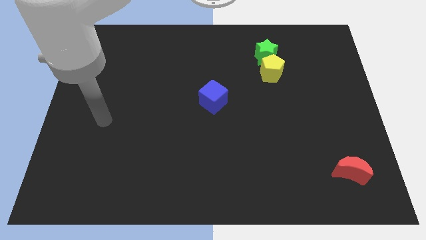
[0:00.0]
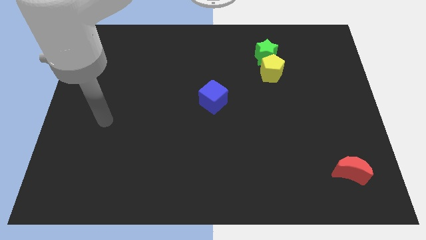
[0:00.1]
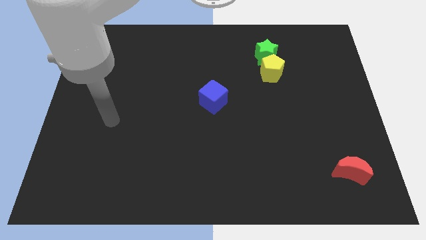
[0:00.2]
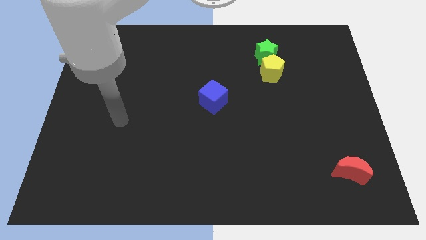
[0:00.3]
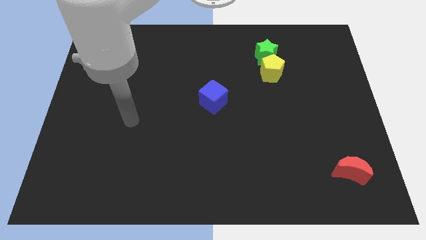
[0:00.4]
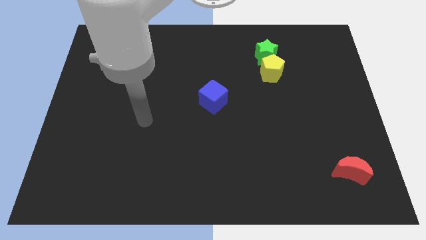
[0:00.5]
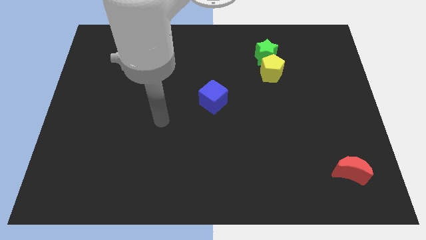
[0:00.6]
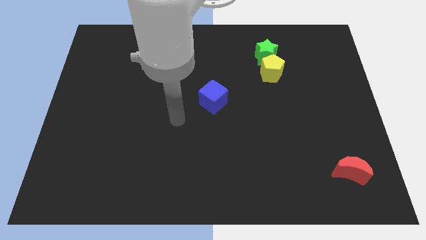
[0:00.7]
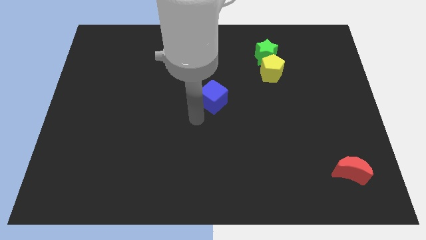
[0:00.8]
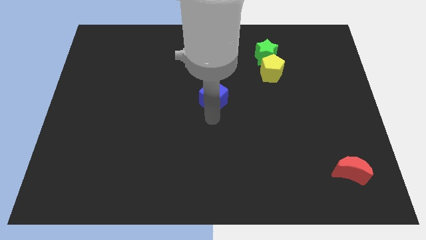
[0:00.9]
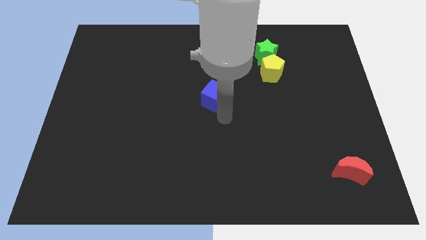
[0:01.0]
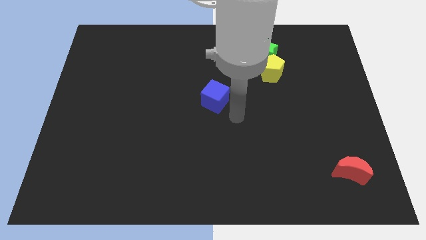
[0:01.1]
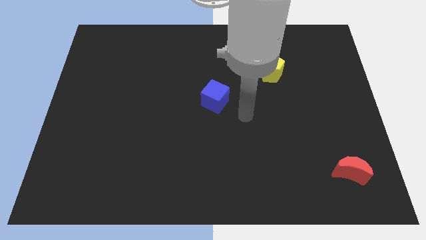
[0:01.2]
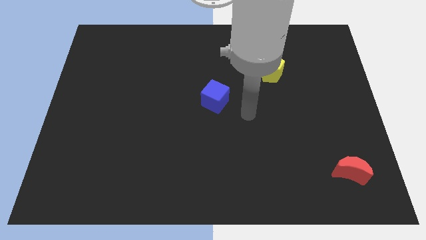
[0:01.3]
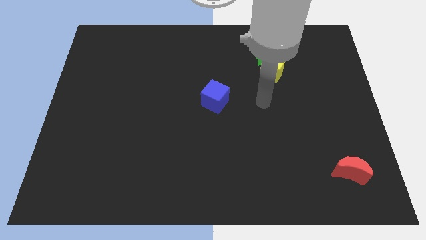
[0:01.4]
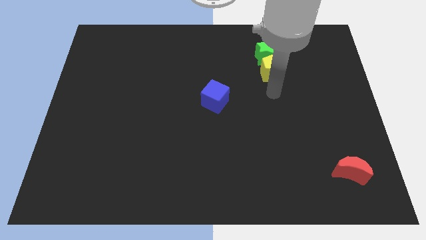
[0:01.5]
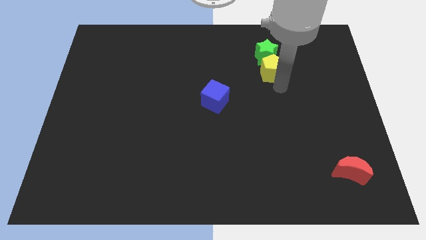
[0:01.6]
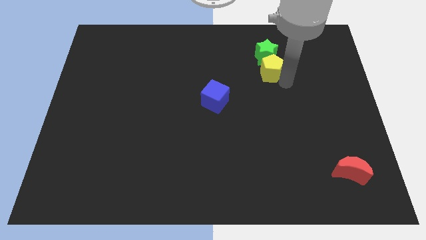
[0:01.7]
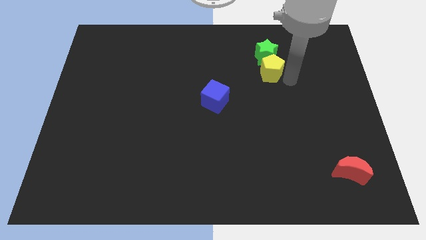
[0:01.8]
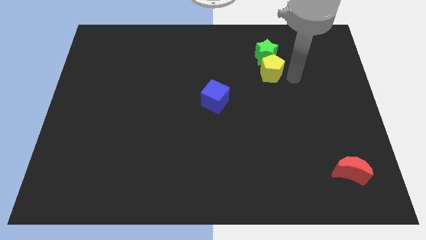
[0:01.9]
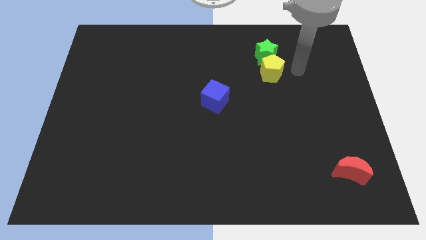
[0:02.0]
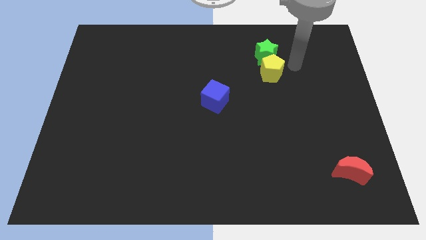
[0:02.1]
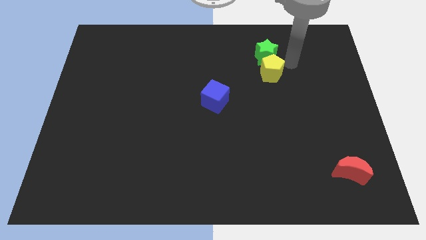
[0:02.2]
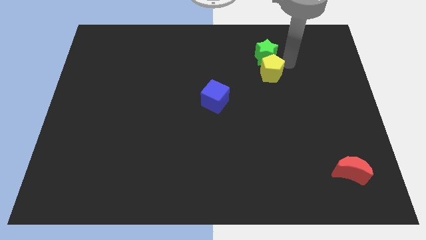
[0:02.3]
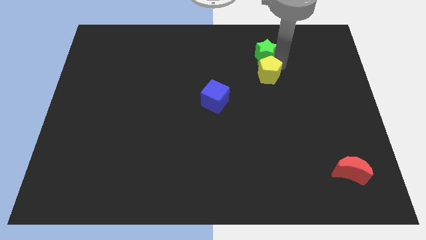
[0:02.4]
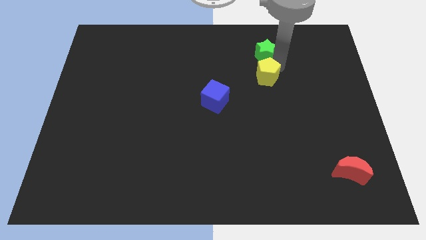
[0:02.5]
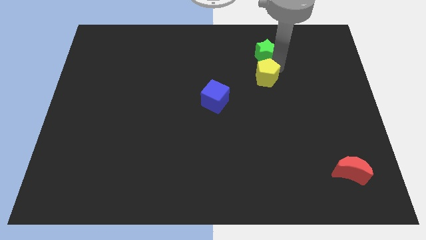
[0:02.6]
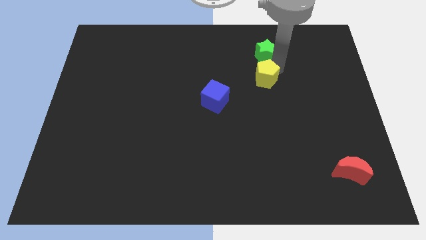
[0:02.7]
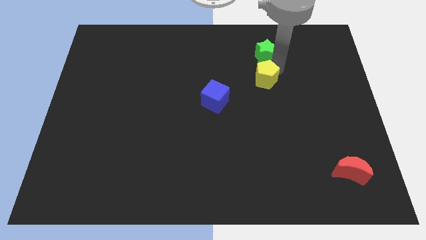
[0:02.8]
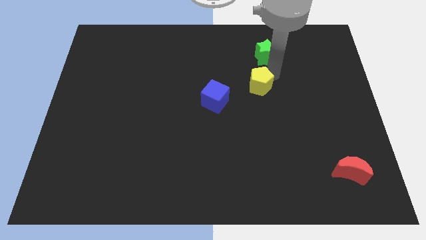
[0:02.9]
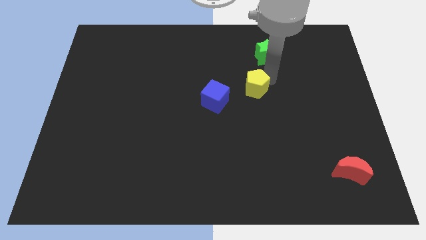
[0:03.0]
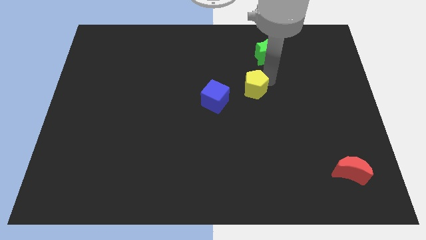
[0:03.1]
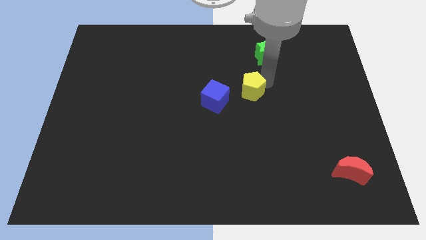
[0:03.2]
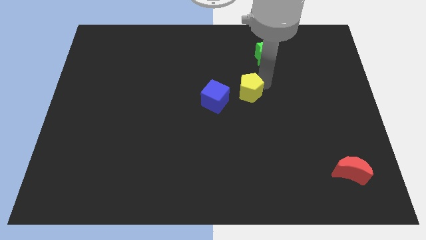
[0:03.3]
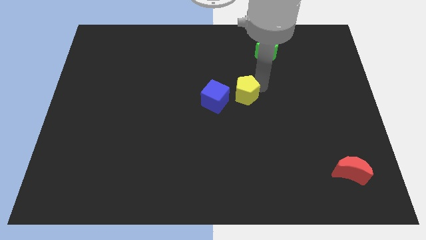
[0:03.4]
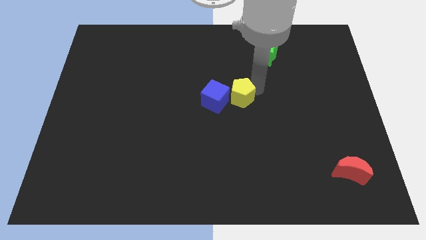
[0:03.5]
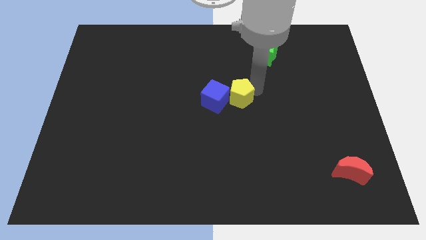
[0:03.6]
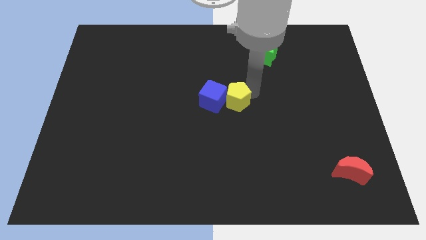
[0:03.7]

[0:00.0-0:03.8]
push the pentagon to the cube

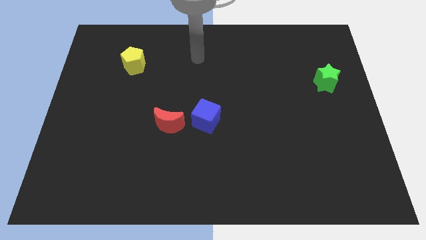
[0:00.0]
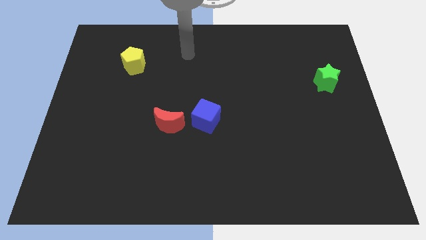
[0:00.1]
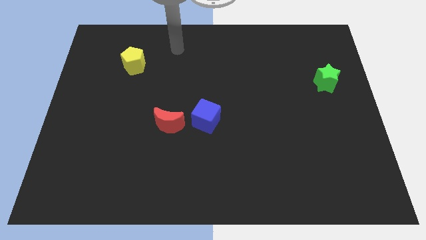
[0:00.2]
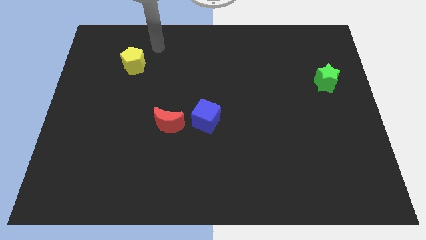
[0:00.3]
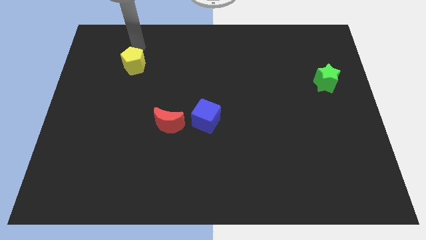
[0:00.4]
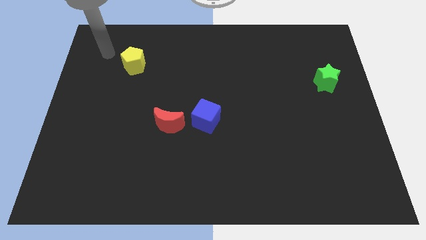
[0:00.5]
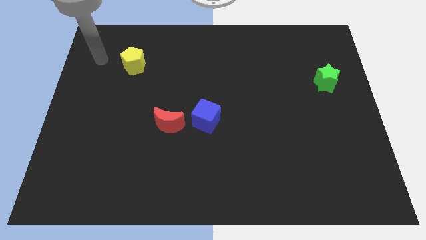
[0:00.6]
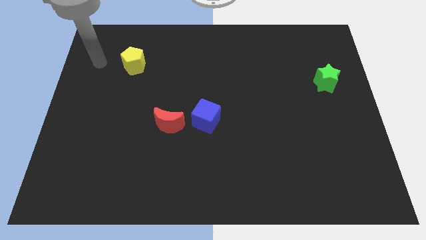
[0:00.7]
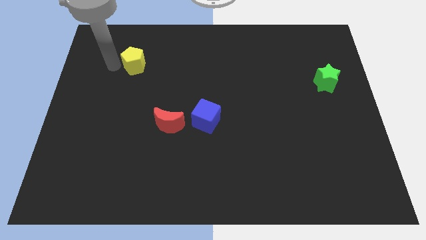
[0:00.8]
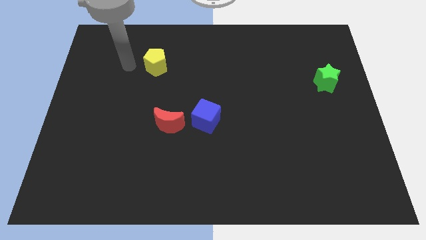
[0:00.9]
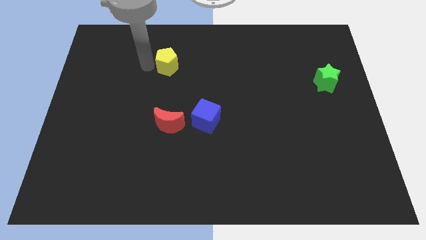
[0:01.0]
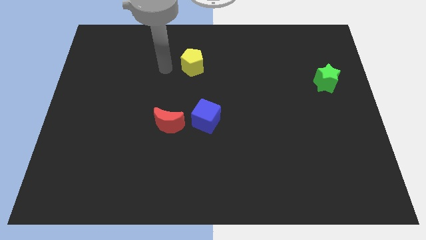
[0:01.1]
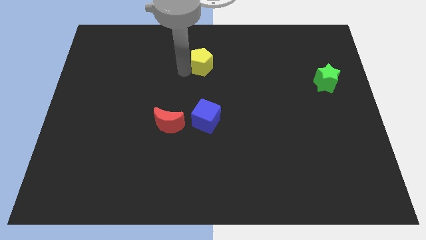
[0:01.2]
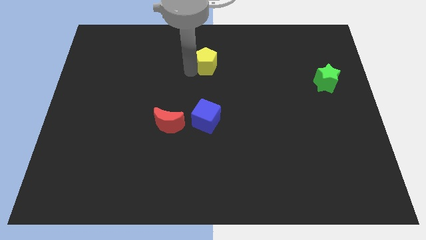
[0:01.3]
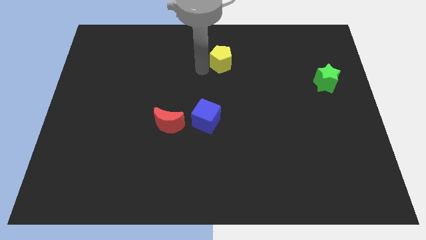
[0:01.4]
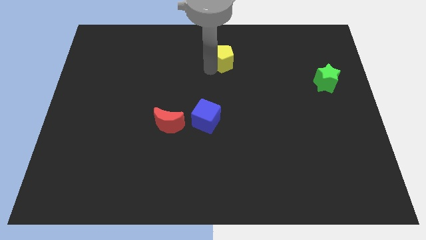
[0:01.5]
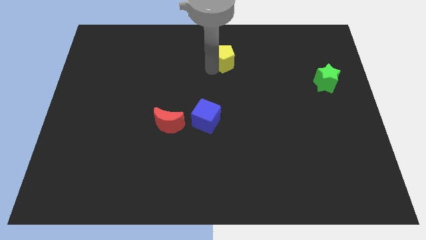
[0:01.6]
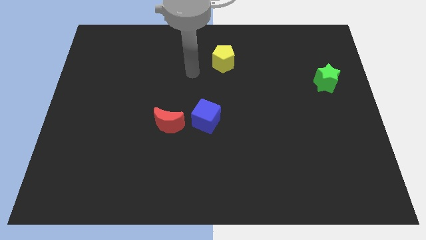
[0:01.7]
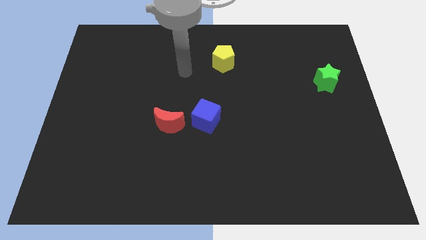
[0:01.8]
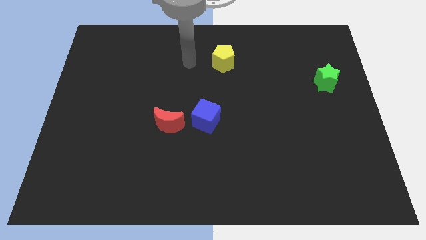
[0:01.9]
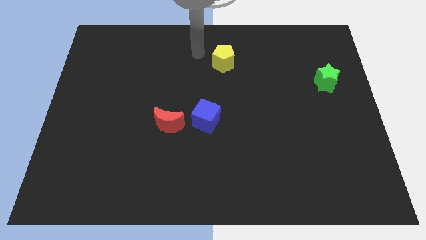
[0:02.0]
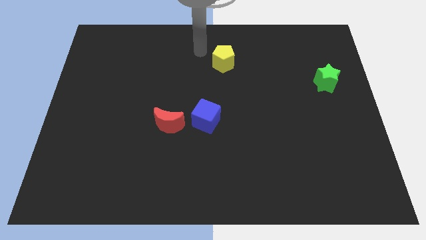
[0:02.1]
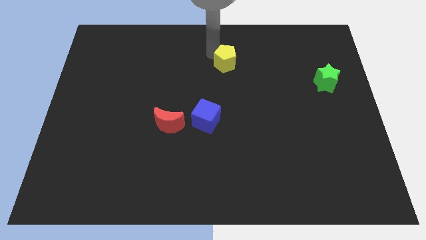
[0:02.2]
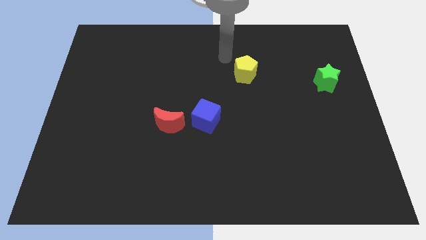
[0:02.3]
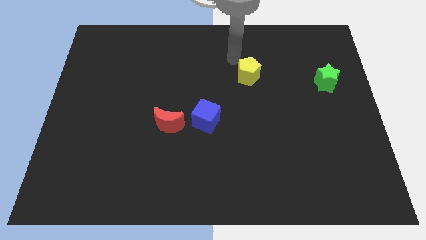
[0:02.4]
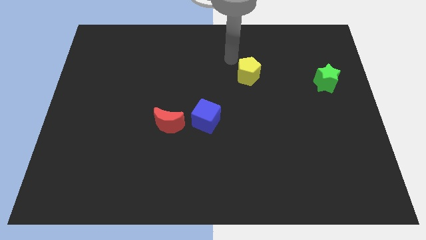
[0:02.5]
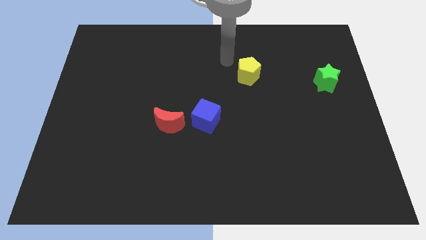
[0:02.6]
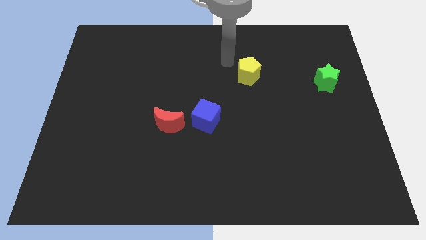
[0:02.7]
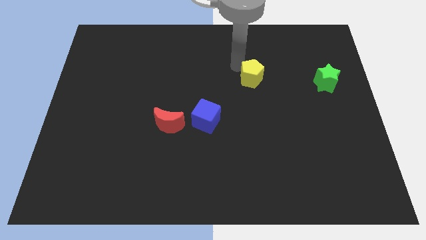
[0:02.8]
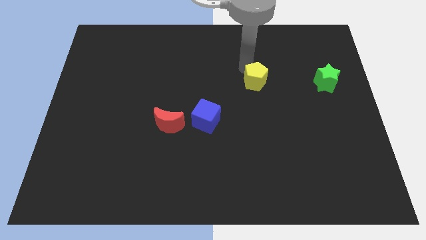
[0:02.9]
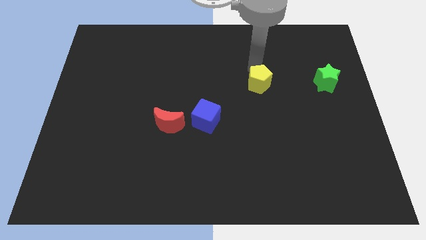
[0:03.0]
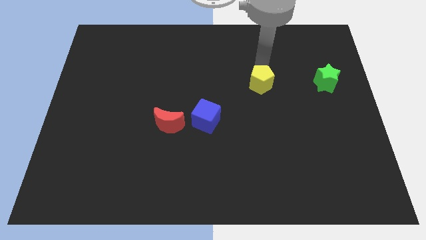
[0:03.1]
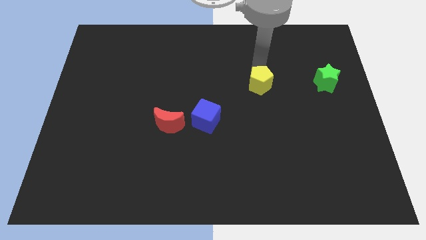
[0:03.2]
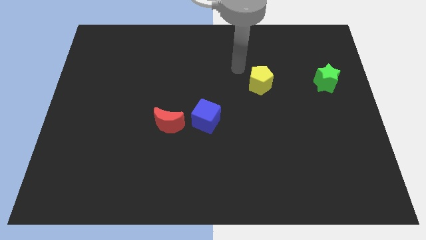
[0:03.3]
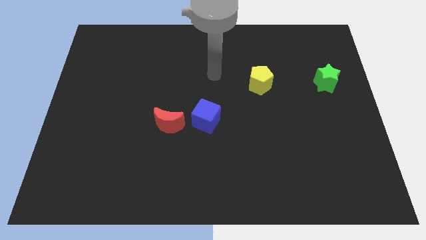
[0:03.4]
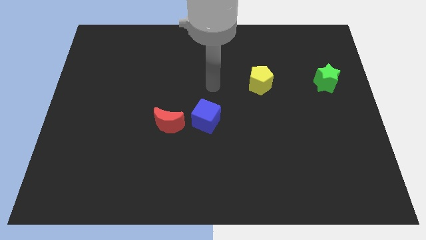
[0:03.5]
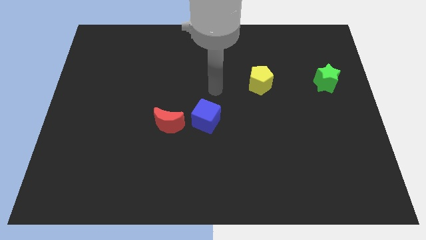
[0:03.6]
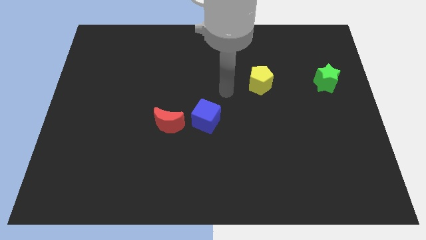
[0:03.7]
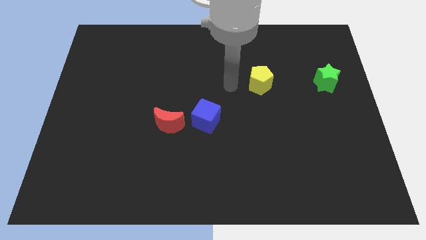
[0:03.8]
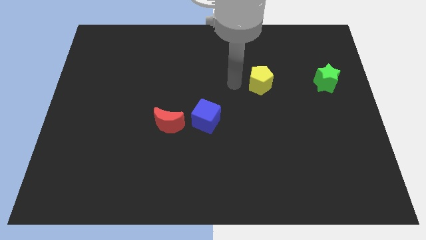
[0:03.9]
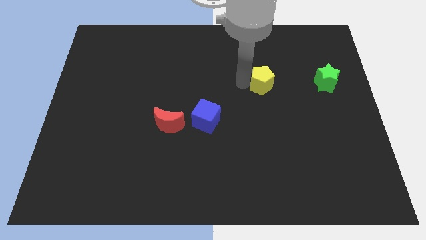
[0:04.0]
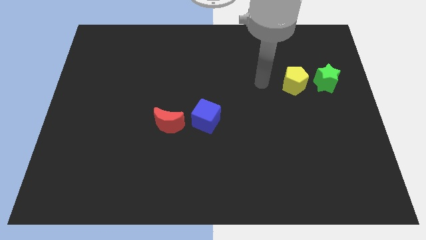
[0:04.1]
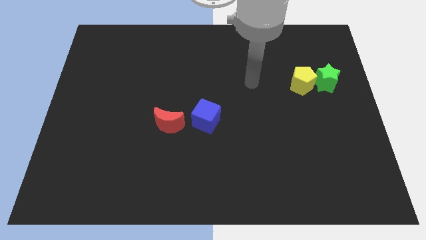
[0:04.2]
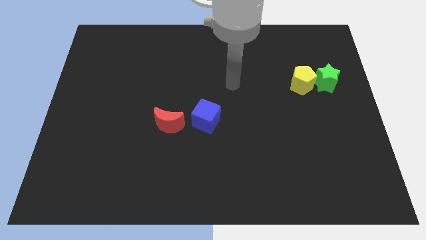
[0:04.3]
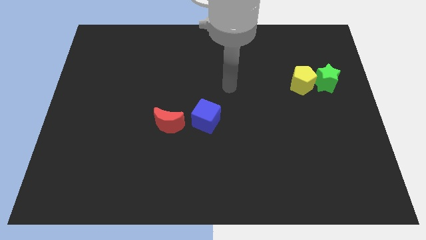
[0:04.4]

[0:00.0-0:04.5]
slide the pentagon towards the star

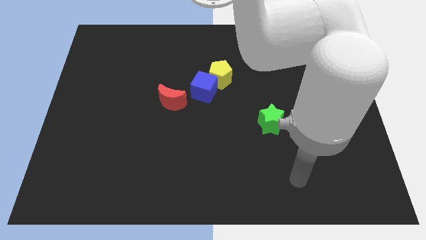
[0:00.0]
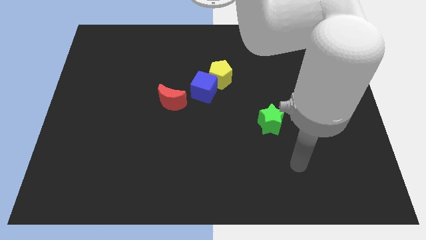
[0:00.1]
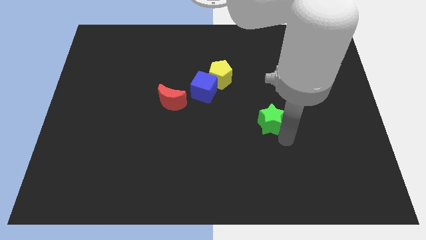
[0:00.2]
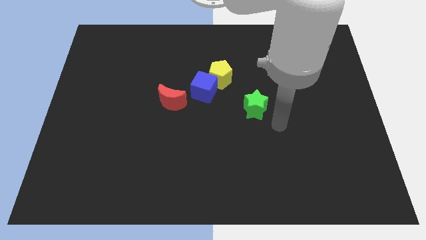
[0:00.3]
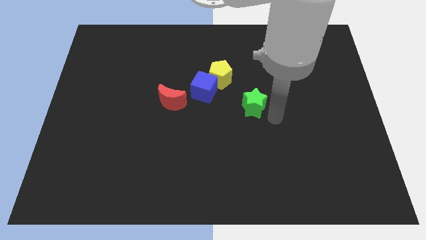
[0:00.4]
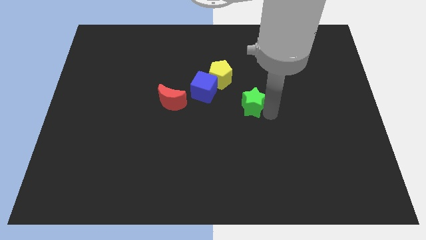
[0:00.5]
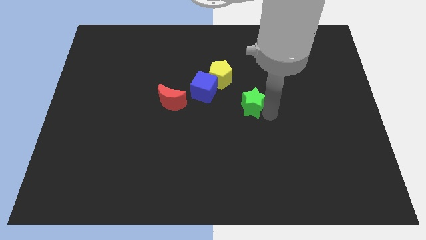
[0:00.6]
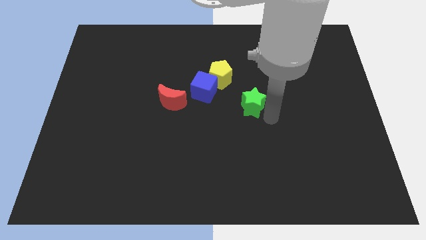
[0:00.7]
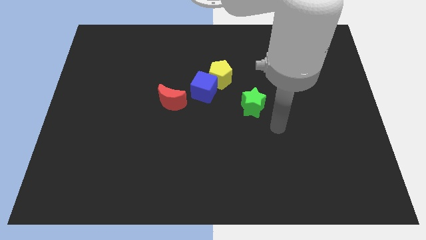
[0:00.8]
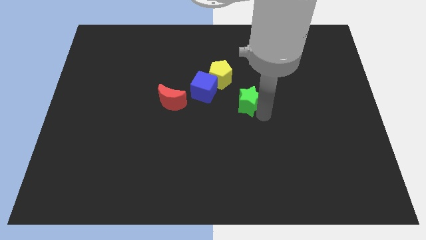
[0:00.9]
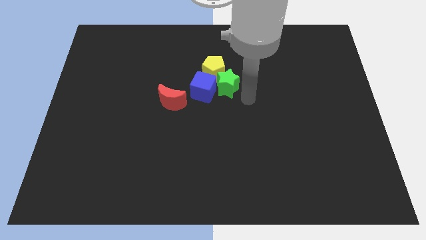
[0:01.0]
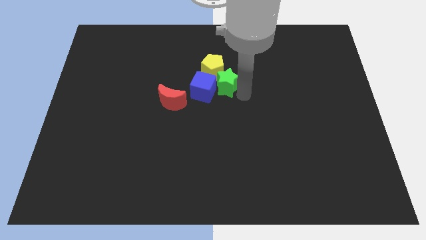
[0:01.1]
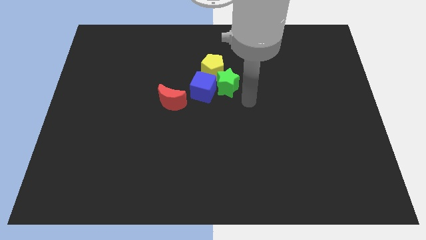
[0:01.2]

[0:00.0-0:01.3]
move the star close to the yellow block
